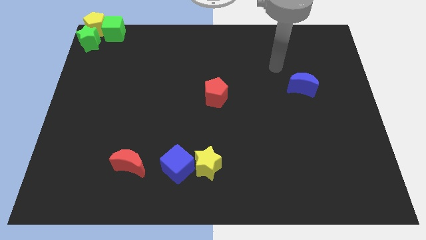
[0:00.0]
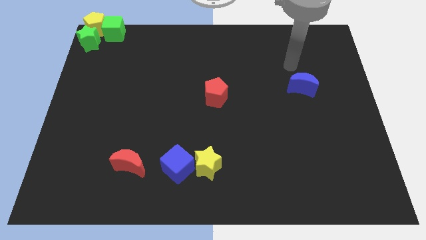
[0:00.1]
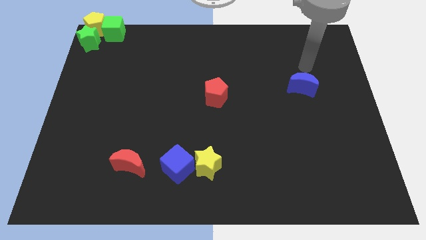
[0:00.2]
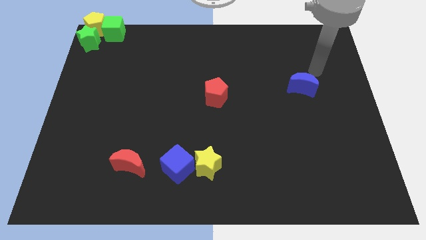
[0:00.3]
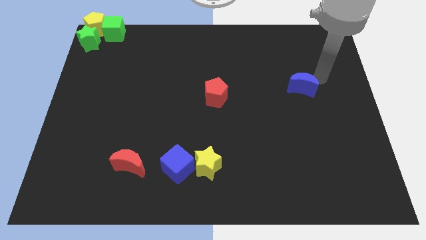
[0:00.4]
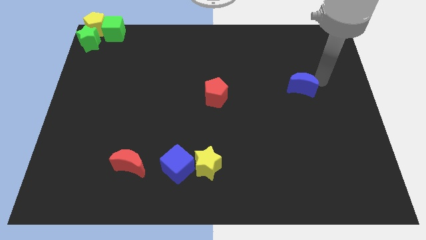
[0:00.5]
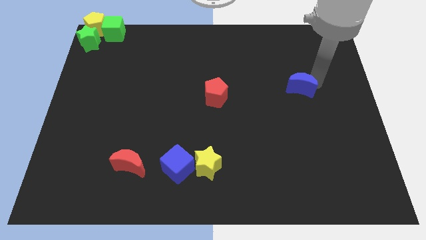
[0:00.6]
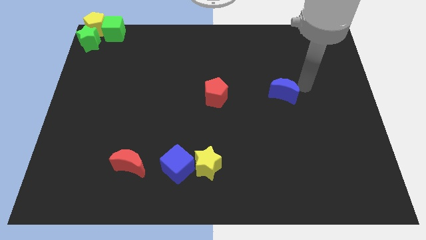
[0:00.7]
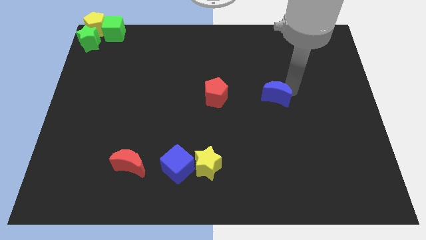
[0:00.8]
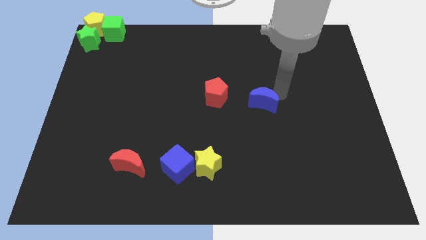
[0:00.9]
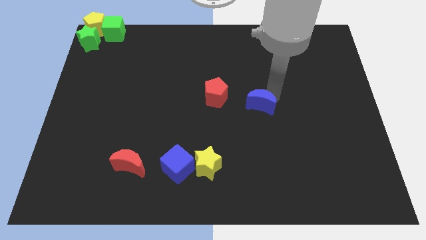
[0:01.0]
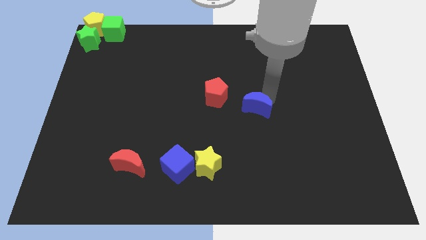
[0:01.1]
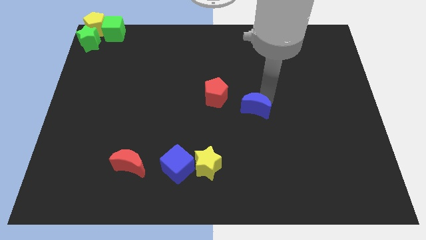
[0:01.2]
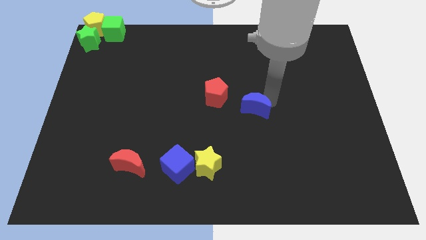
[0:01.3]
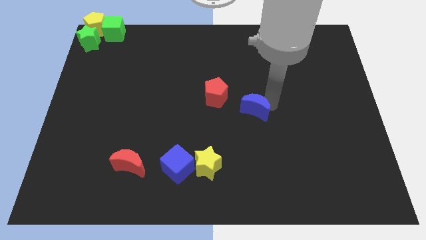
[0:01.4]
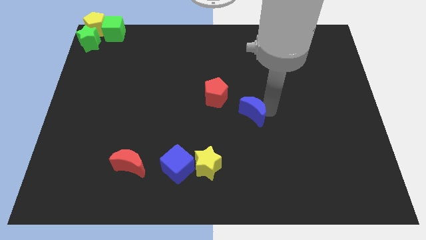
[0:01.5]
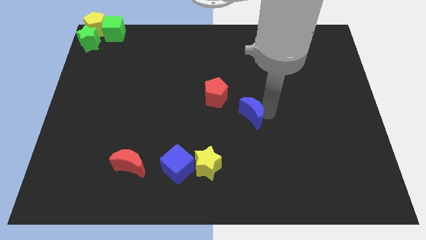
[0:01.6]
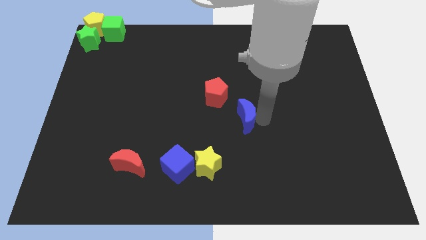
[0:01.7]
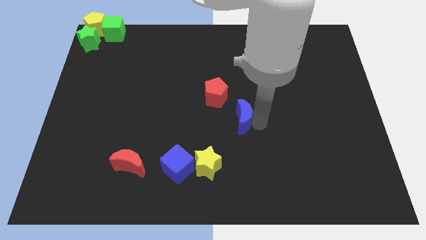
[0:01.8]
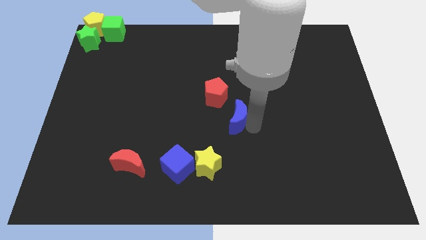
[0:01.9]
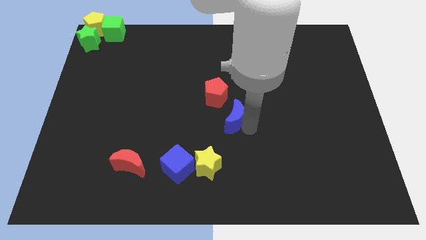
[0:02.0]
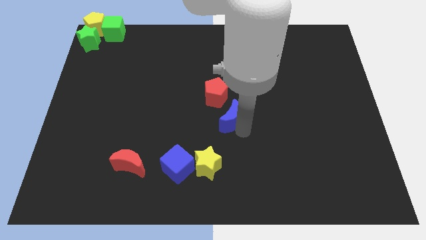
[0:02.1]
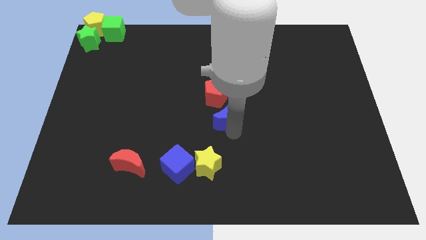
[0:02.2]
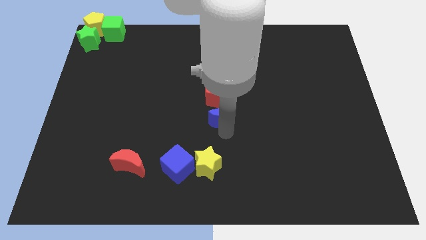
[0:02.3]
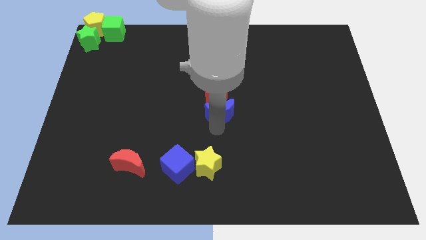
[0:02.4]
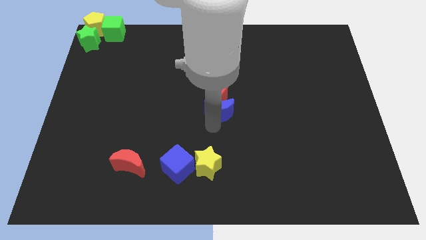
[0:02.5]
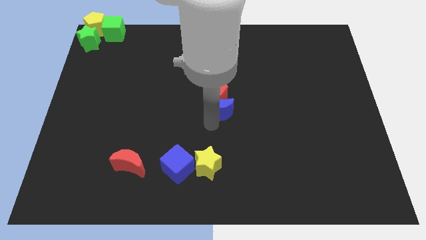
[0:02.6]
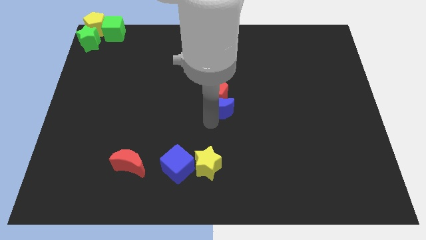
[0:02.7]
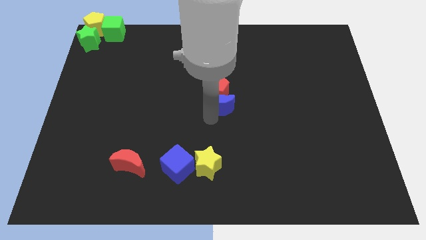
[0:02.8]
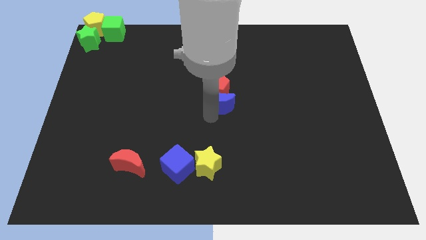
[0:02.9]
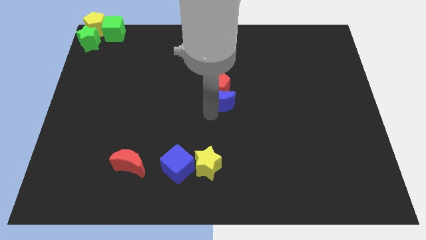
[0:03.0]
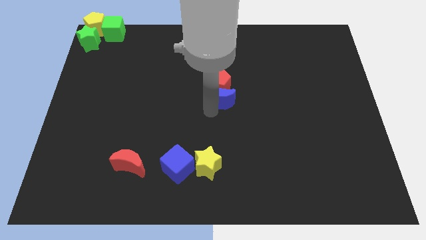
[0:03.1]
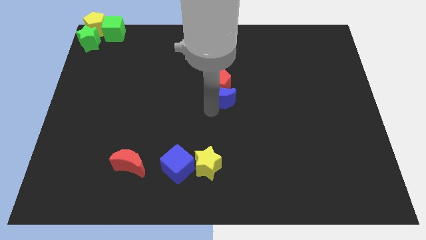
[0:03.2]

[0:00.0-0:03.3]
push the blue cube into the red pentagon

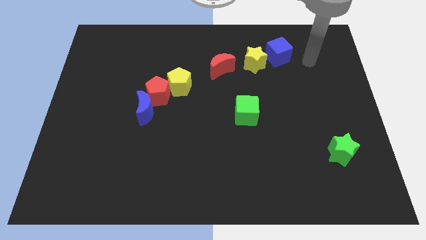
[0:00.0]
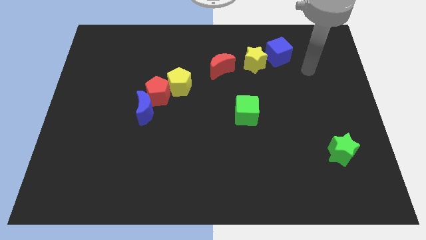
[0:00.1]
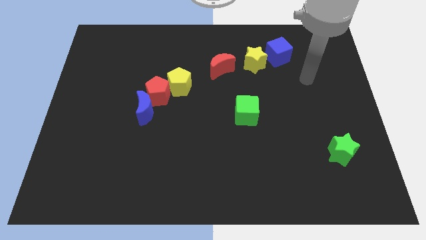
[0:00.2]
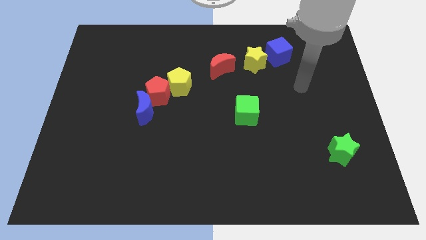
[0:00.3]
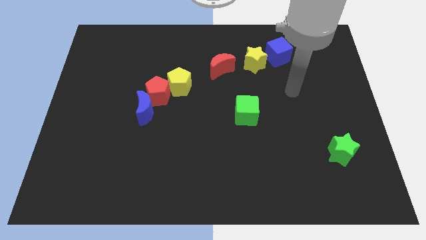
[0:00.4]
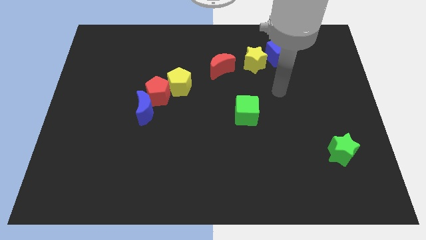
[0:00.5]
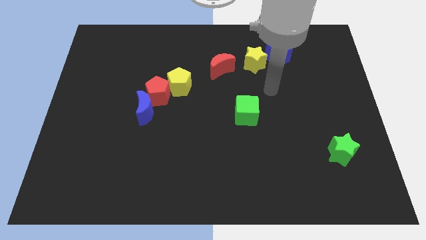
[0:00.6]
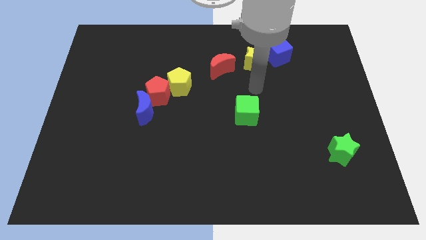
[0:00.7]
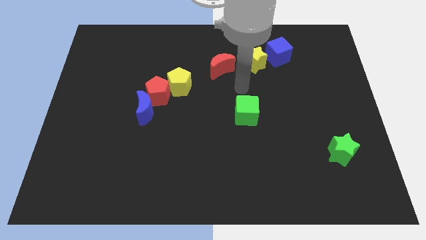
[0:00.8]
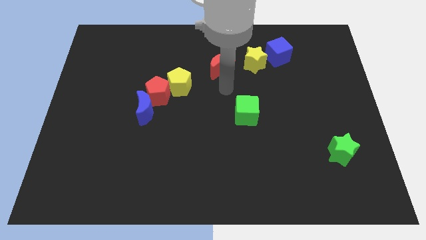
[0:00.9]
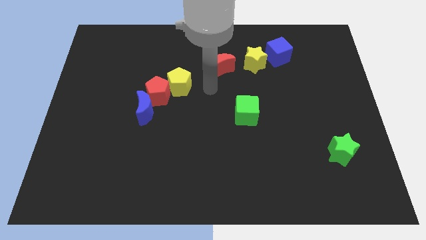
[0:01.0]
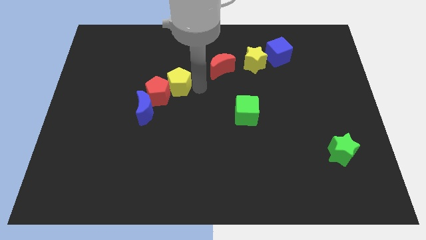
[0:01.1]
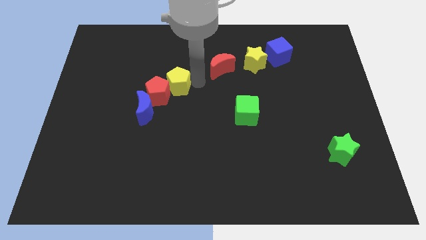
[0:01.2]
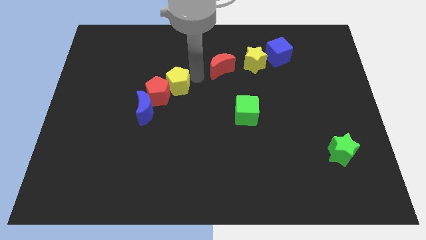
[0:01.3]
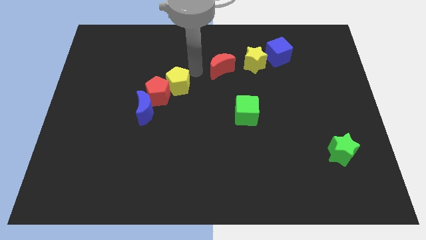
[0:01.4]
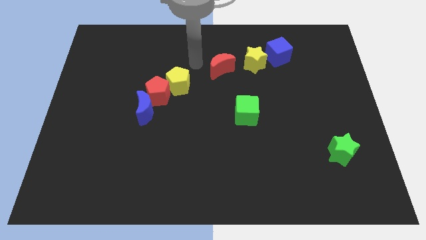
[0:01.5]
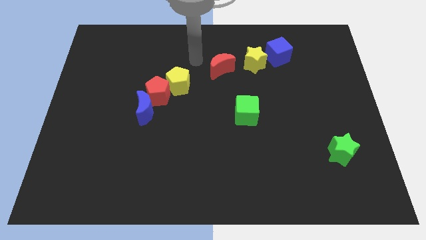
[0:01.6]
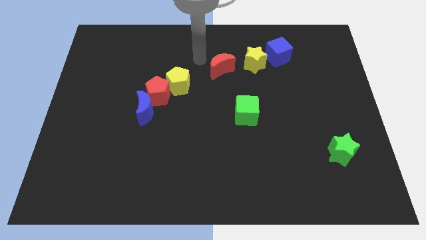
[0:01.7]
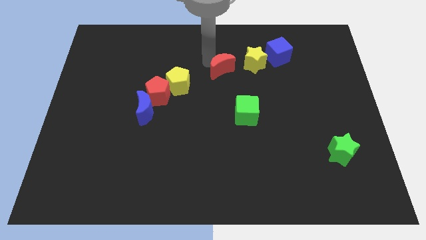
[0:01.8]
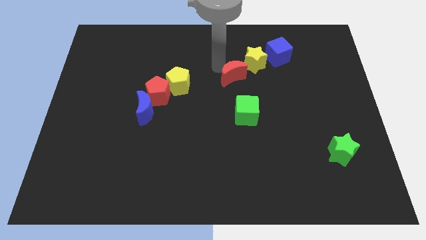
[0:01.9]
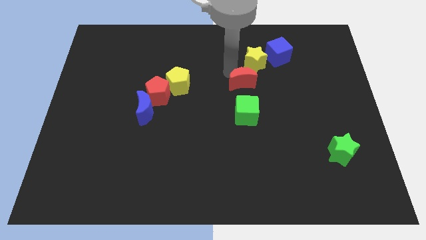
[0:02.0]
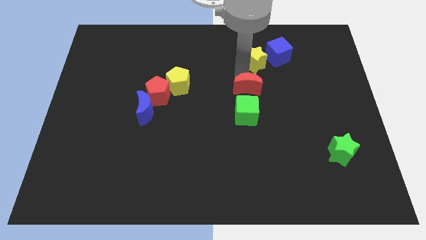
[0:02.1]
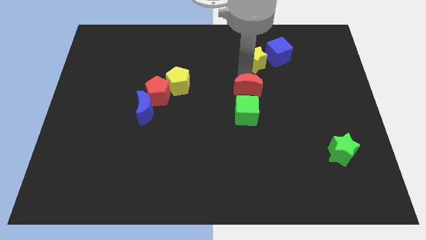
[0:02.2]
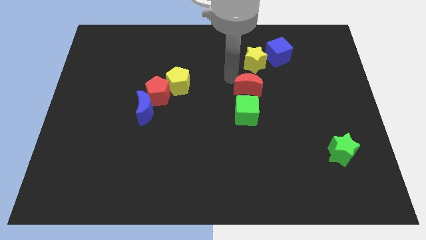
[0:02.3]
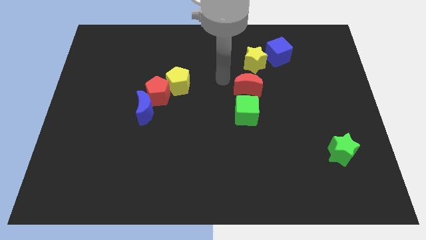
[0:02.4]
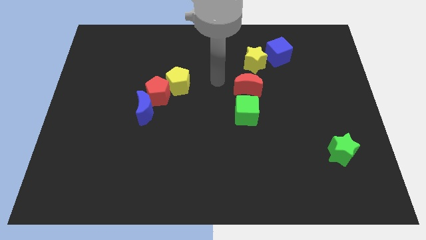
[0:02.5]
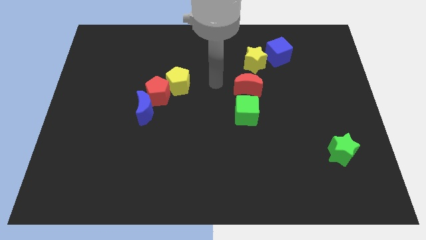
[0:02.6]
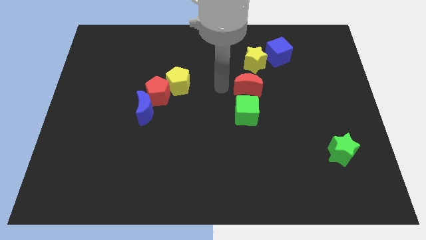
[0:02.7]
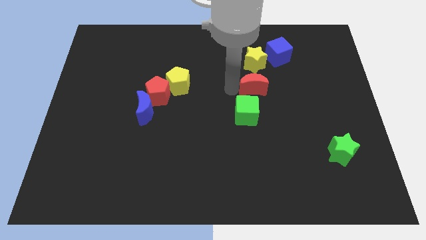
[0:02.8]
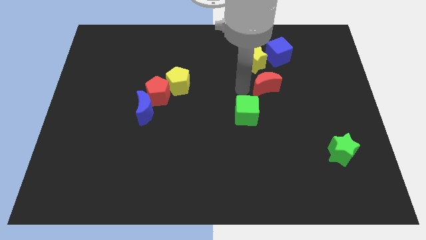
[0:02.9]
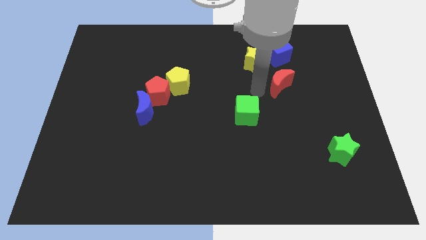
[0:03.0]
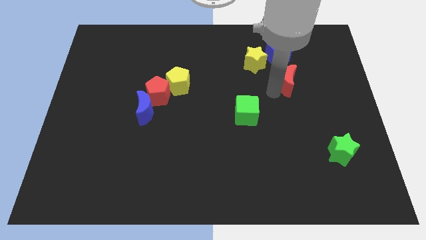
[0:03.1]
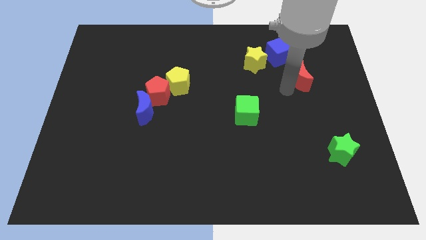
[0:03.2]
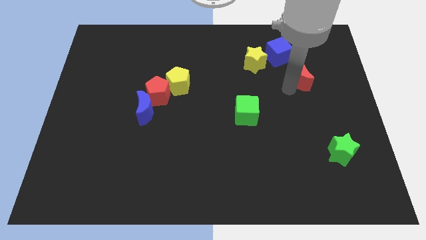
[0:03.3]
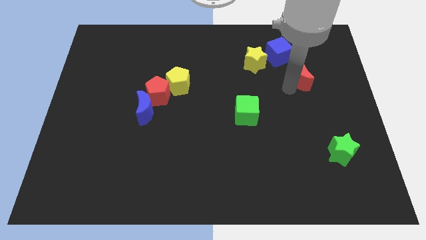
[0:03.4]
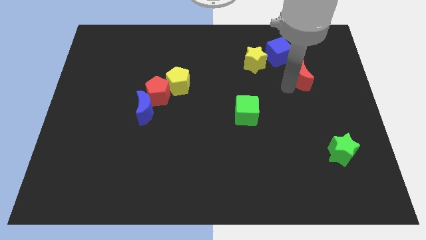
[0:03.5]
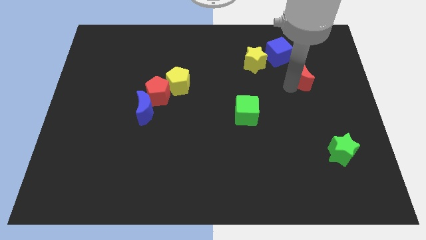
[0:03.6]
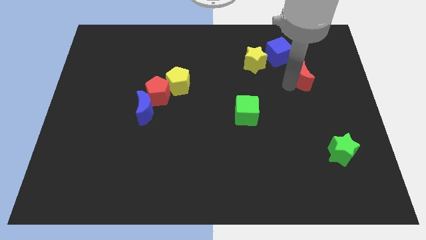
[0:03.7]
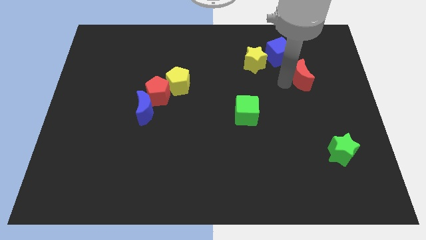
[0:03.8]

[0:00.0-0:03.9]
place the red crescent at the bottom right side of blue cube

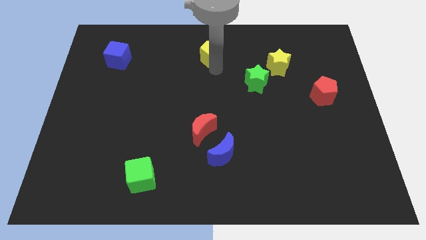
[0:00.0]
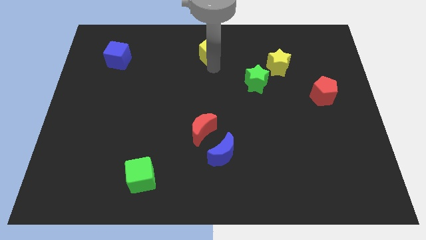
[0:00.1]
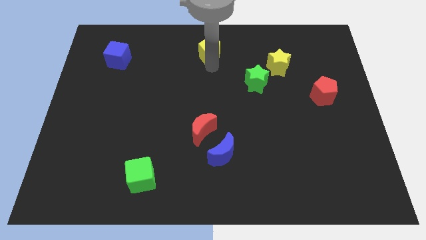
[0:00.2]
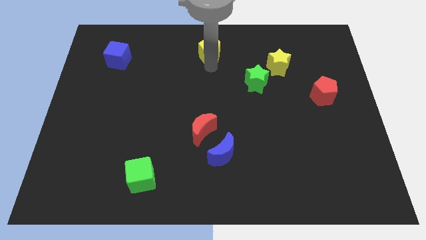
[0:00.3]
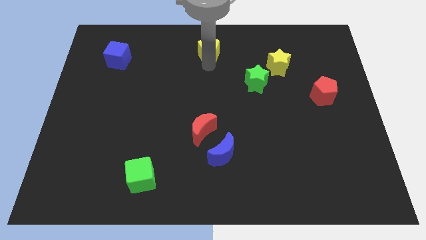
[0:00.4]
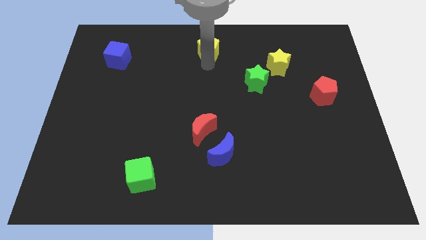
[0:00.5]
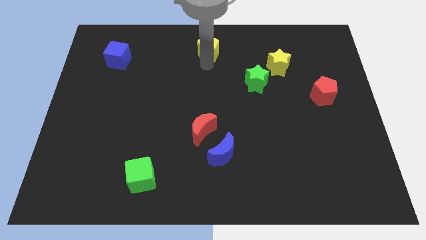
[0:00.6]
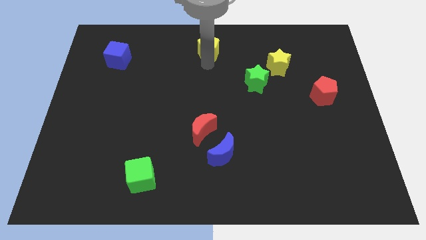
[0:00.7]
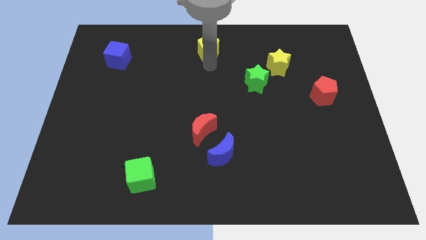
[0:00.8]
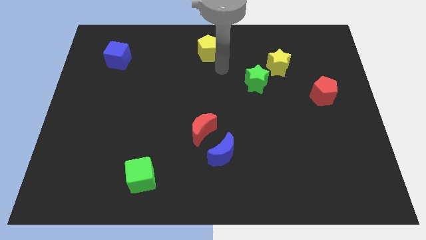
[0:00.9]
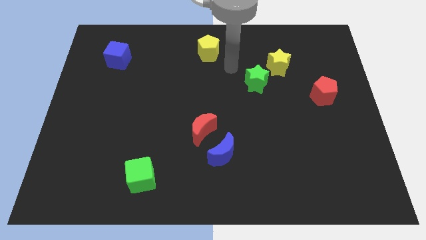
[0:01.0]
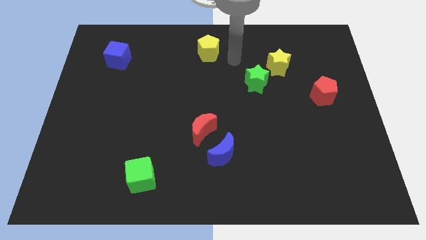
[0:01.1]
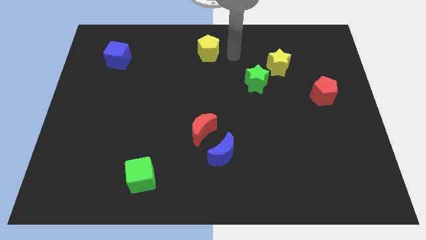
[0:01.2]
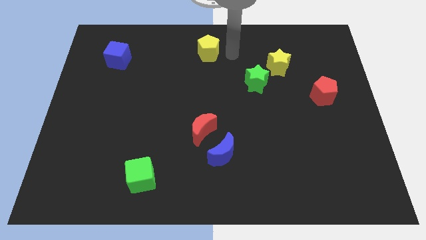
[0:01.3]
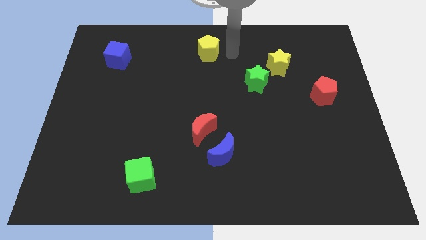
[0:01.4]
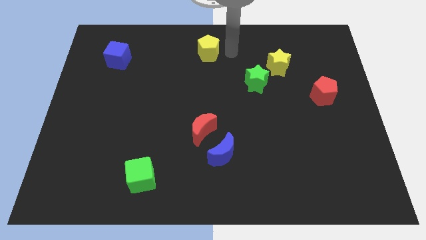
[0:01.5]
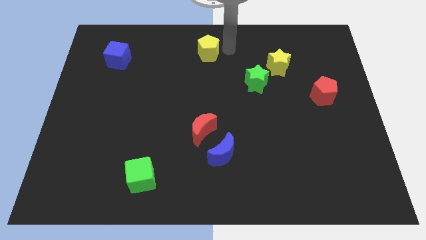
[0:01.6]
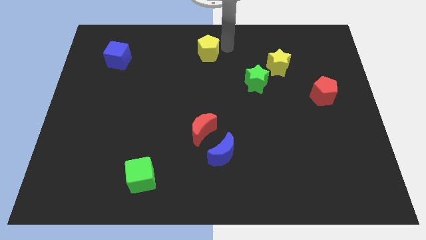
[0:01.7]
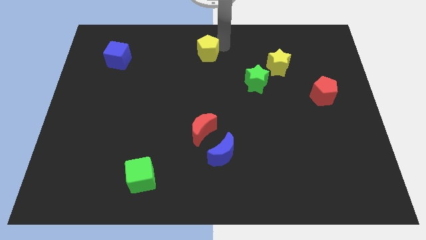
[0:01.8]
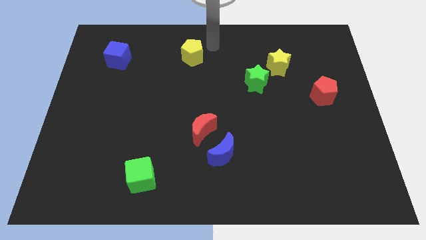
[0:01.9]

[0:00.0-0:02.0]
place the yellow pentagon towards the top center of the board

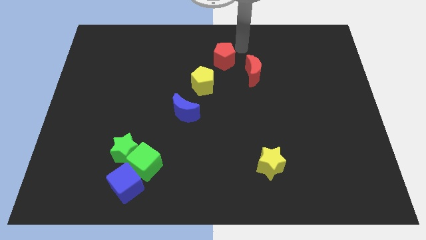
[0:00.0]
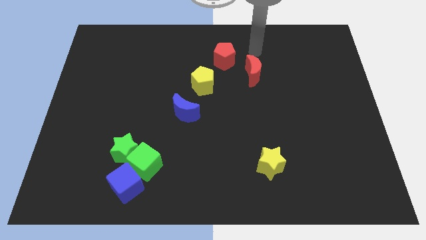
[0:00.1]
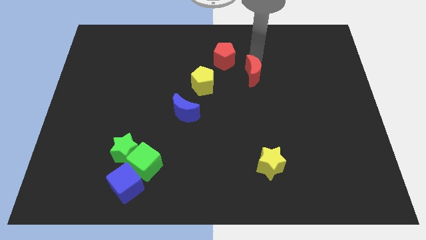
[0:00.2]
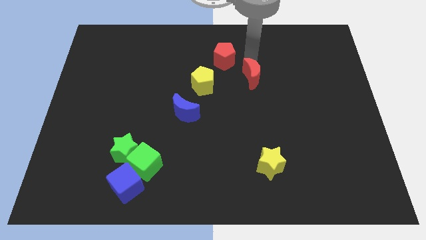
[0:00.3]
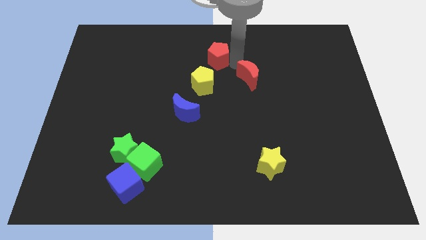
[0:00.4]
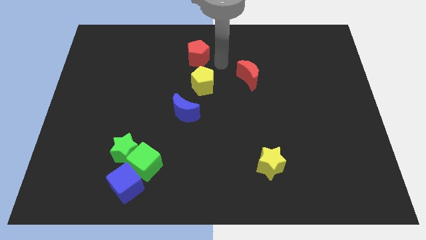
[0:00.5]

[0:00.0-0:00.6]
place the red pentagon above the yellow pentagon
